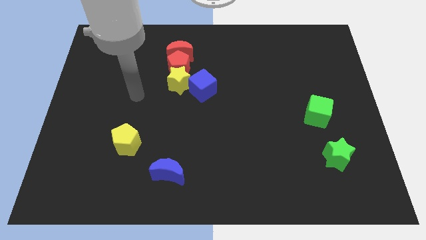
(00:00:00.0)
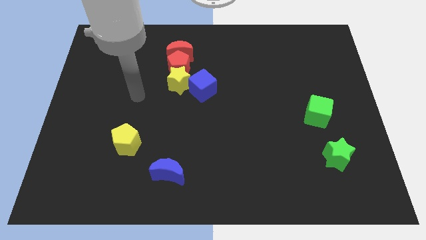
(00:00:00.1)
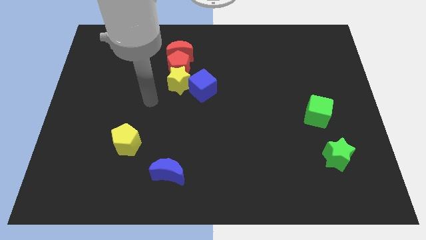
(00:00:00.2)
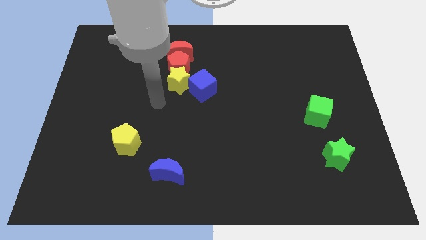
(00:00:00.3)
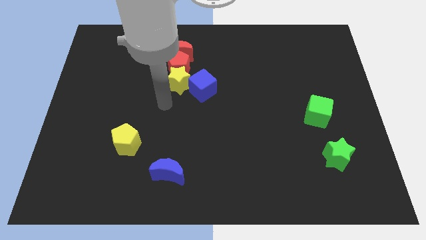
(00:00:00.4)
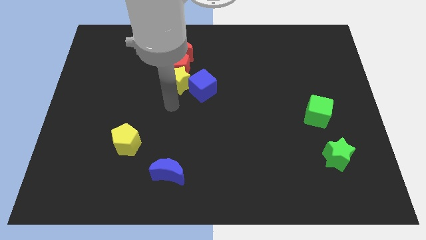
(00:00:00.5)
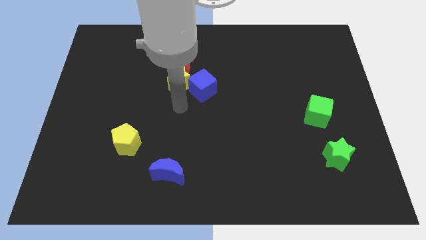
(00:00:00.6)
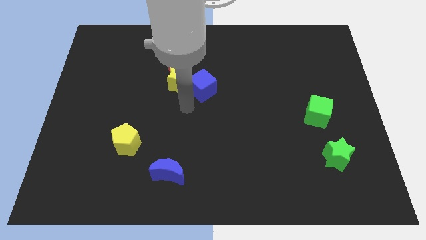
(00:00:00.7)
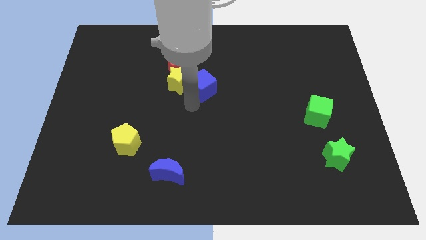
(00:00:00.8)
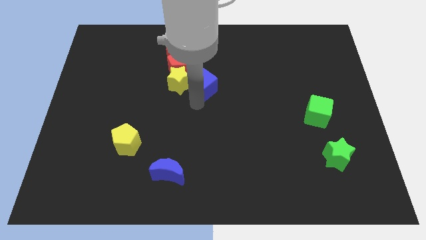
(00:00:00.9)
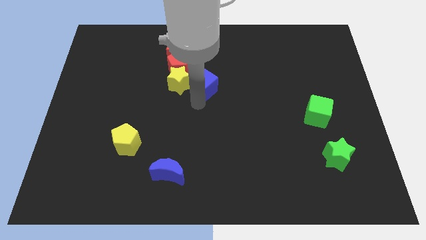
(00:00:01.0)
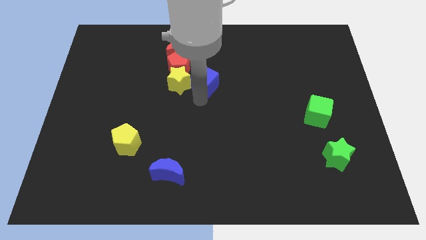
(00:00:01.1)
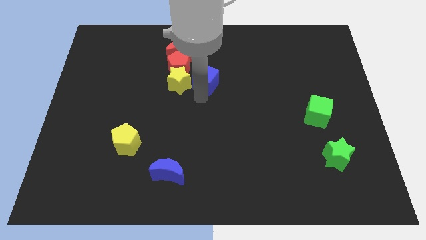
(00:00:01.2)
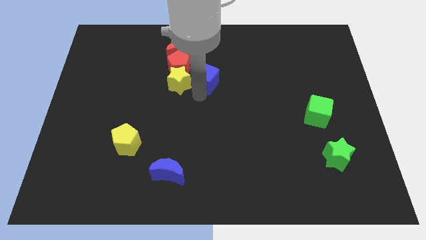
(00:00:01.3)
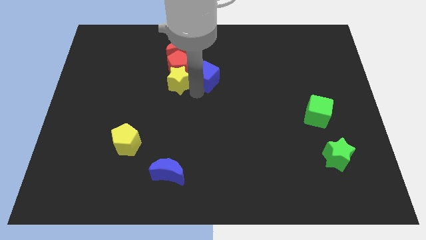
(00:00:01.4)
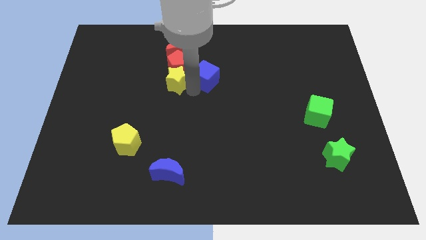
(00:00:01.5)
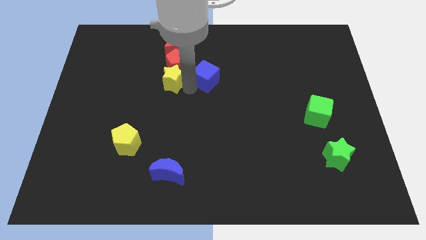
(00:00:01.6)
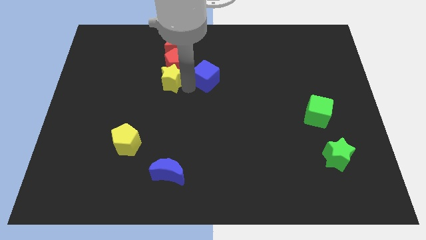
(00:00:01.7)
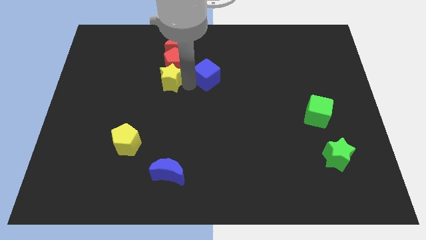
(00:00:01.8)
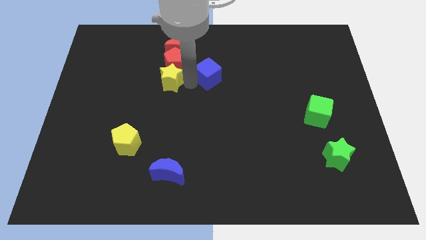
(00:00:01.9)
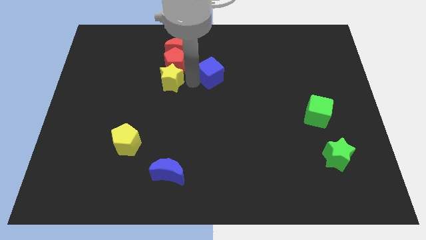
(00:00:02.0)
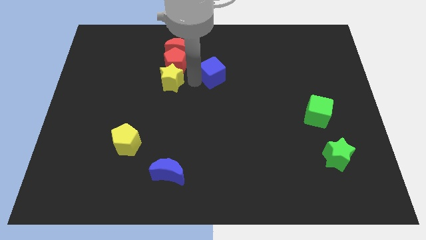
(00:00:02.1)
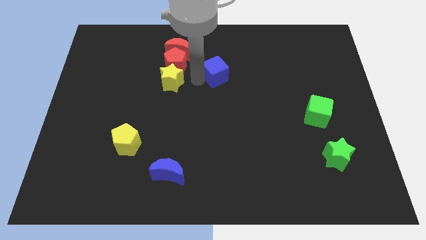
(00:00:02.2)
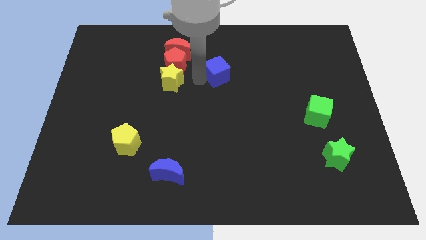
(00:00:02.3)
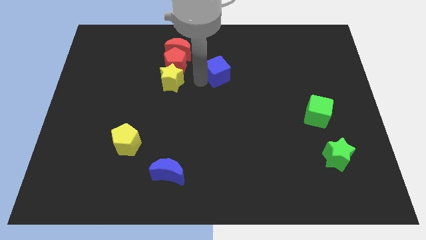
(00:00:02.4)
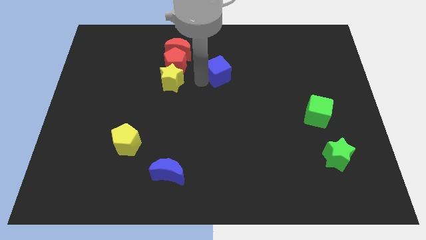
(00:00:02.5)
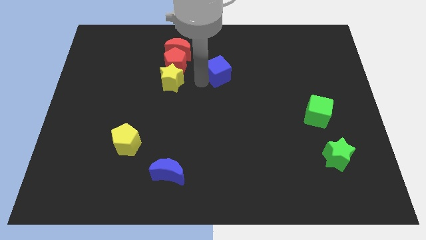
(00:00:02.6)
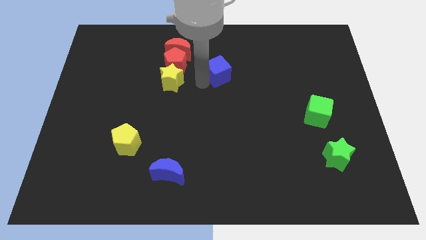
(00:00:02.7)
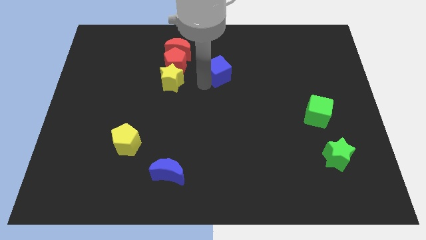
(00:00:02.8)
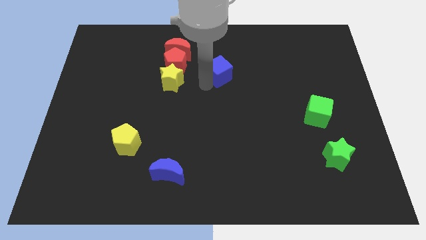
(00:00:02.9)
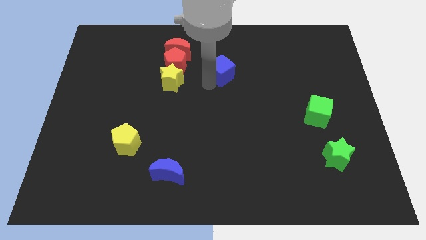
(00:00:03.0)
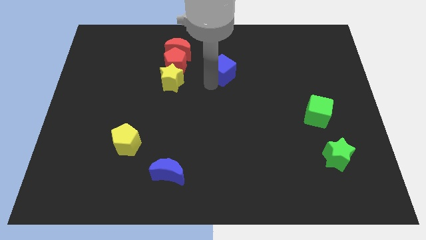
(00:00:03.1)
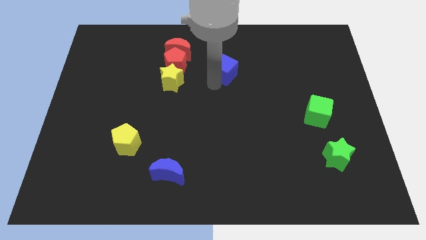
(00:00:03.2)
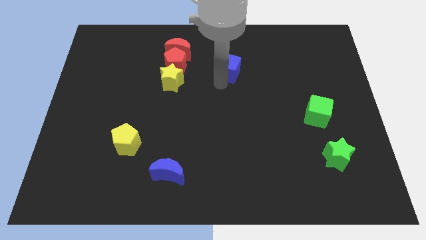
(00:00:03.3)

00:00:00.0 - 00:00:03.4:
move the blue cube away from the yellow star

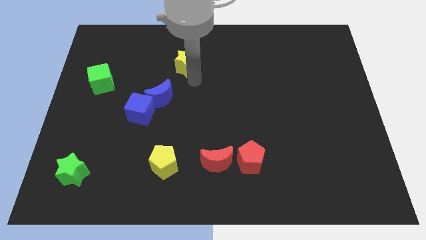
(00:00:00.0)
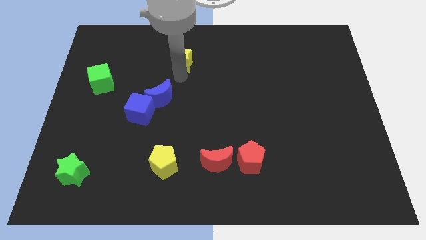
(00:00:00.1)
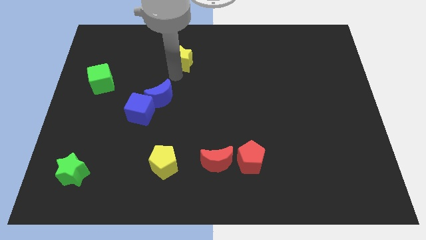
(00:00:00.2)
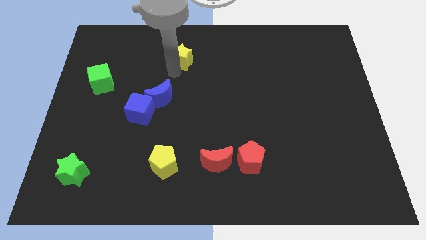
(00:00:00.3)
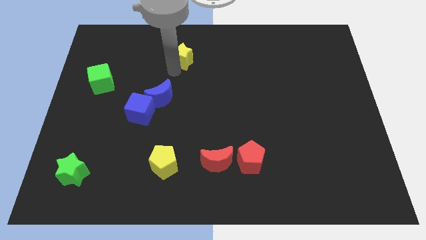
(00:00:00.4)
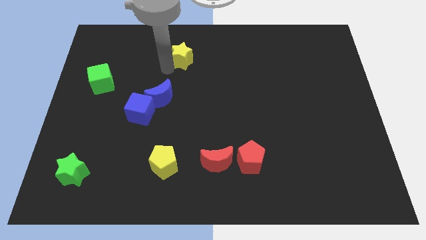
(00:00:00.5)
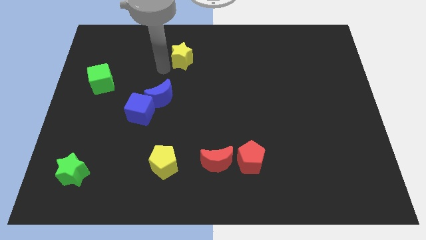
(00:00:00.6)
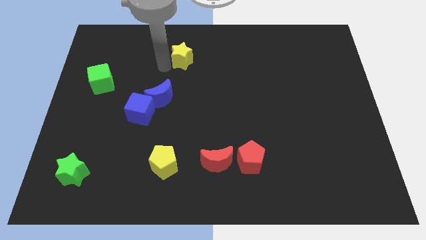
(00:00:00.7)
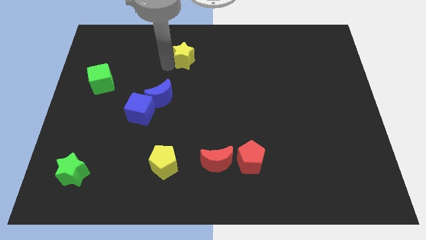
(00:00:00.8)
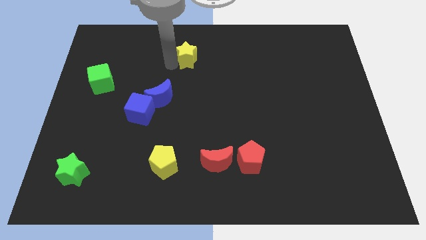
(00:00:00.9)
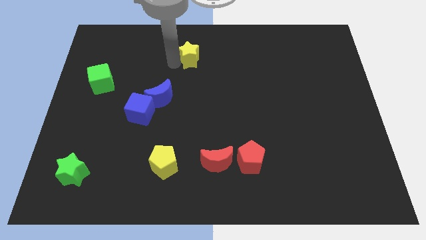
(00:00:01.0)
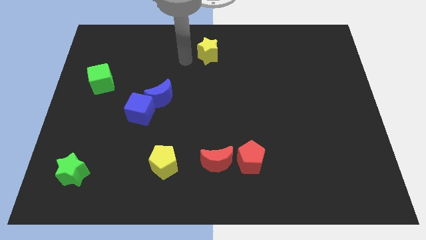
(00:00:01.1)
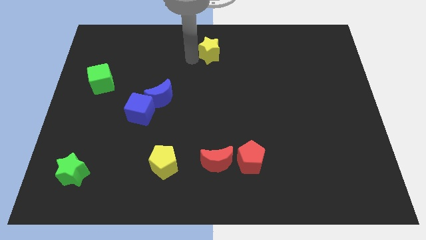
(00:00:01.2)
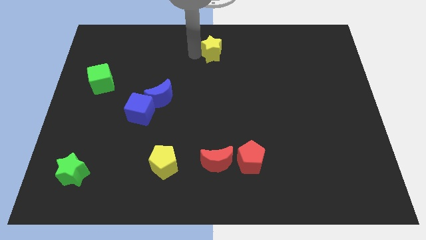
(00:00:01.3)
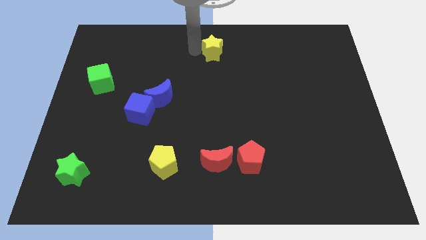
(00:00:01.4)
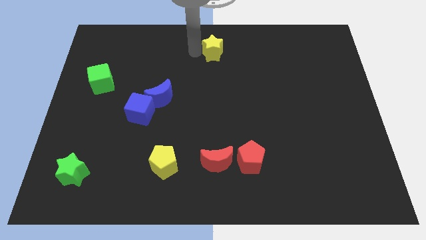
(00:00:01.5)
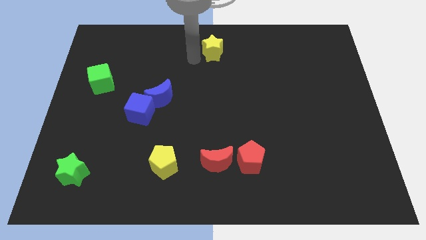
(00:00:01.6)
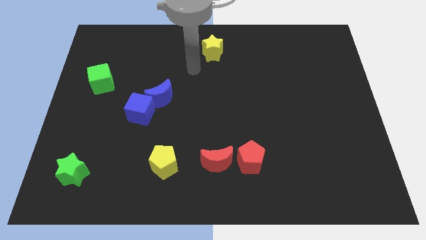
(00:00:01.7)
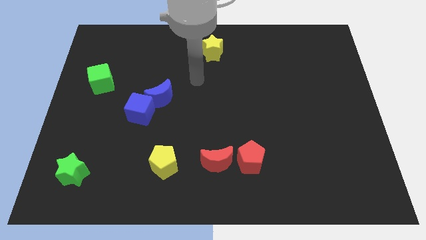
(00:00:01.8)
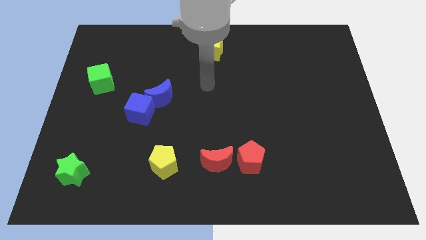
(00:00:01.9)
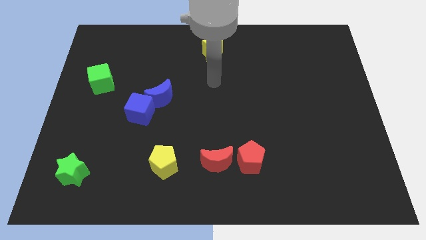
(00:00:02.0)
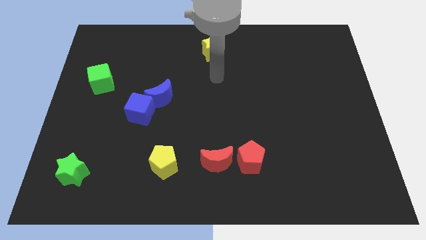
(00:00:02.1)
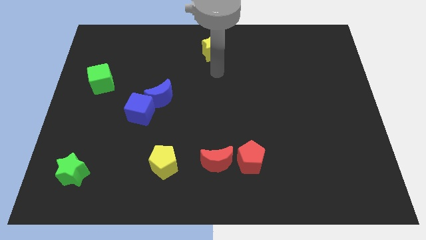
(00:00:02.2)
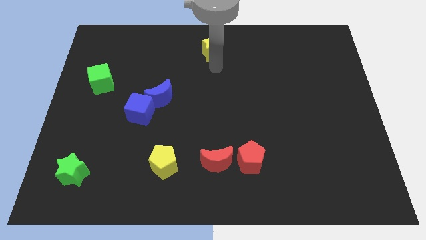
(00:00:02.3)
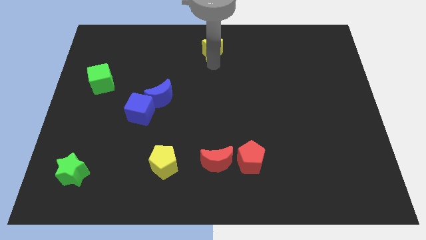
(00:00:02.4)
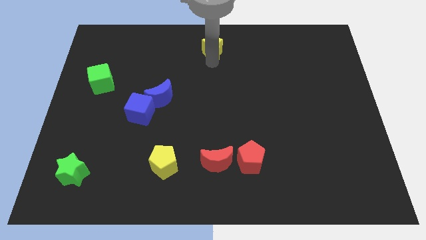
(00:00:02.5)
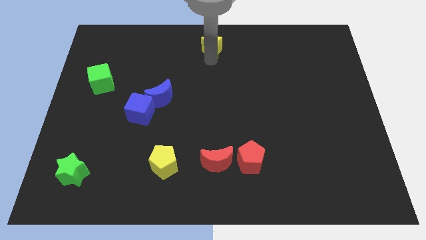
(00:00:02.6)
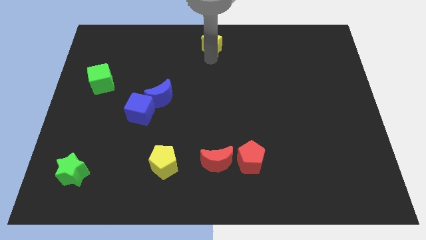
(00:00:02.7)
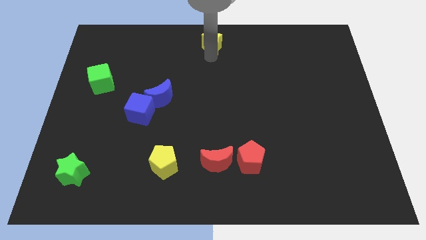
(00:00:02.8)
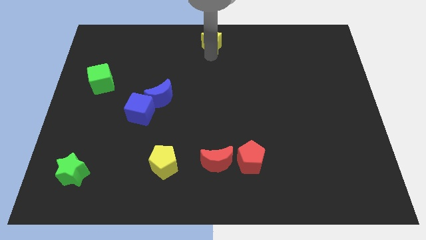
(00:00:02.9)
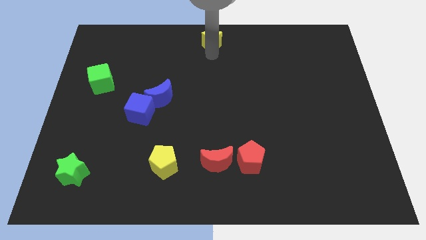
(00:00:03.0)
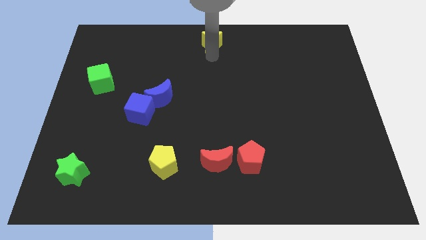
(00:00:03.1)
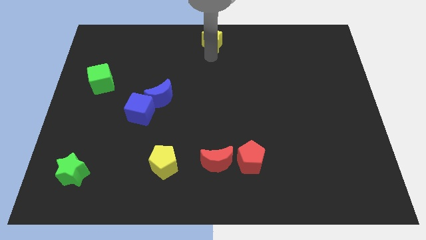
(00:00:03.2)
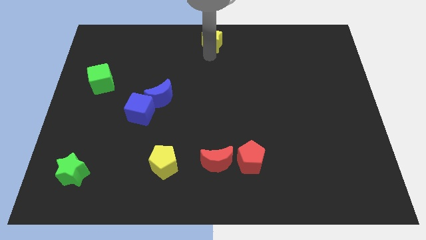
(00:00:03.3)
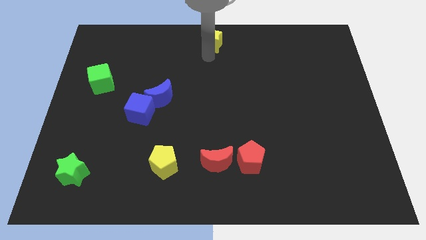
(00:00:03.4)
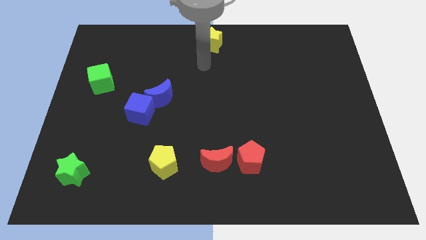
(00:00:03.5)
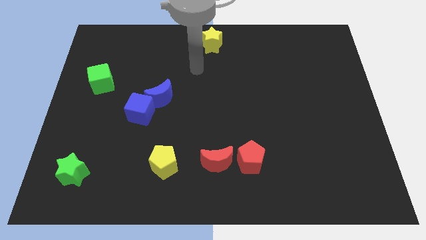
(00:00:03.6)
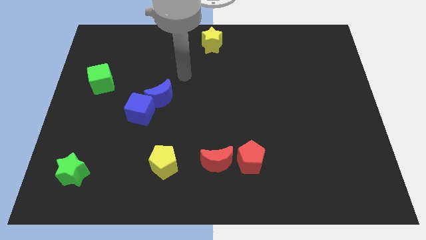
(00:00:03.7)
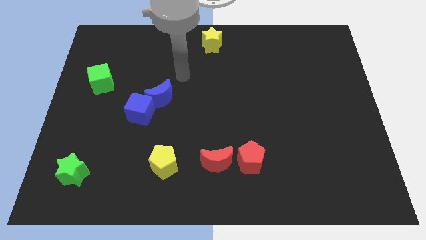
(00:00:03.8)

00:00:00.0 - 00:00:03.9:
place the yellow star at the top of the red moon

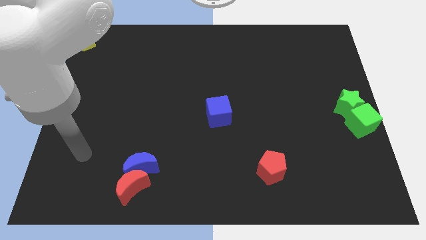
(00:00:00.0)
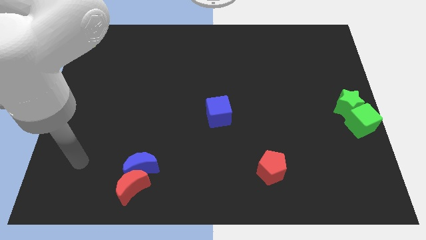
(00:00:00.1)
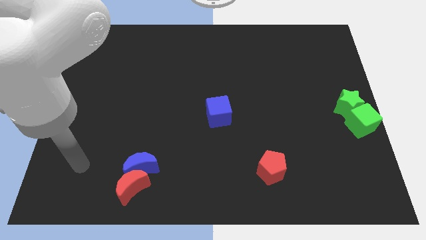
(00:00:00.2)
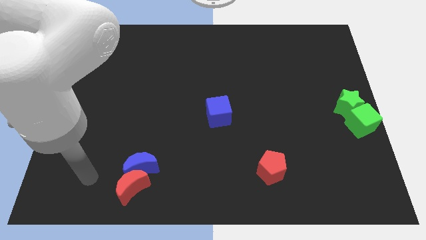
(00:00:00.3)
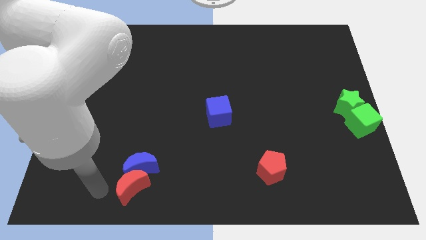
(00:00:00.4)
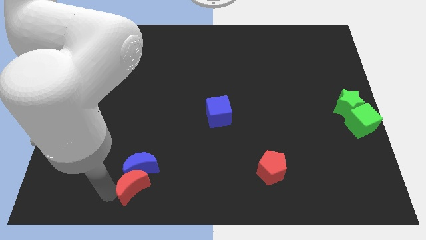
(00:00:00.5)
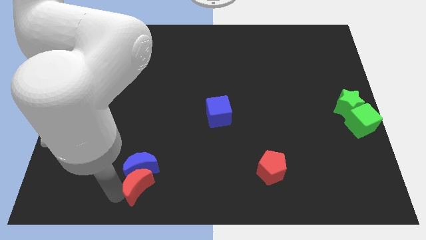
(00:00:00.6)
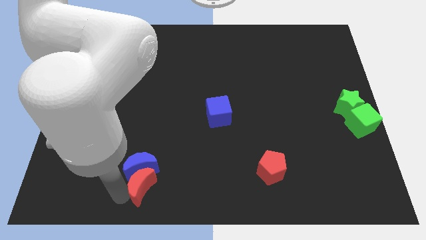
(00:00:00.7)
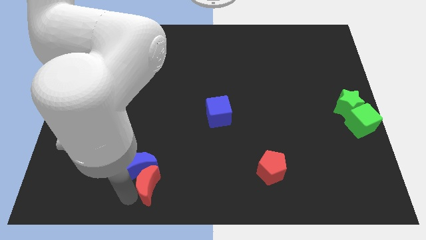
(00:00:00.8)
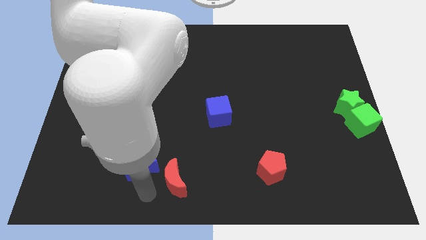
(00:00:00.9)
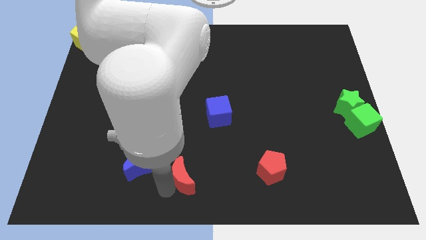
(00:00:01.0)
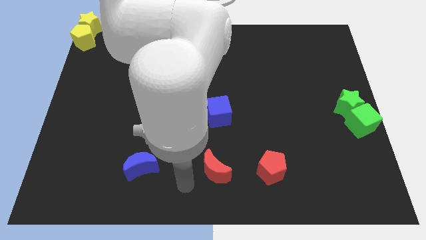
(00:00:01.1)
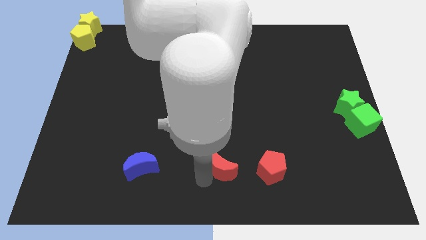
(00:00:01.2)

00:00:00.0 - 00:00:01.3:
push red crescent above blue cube

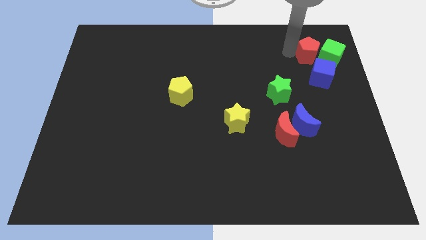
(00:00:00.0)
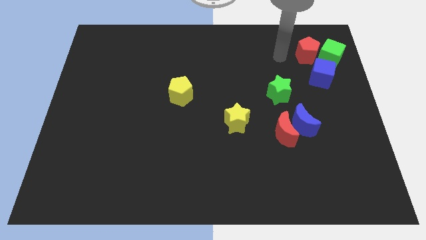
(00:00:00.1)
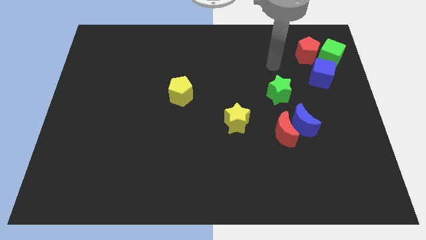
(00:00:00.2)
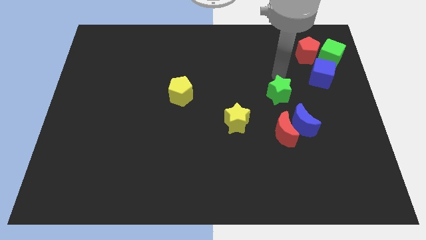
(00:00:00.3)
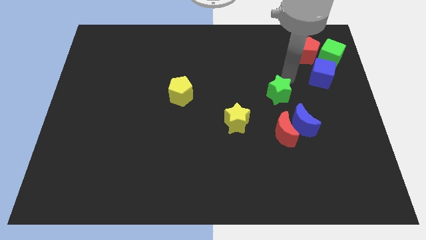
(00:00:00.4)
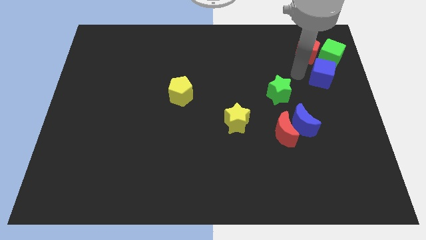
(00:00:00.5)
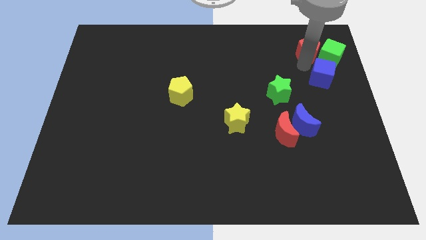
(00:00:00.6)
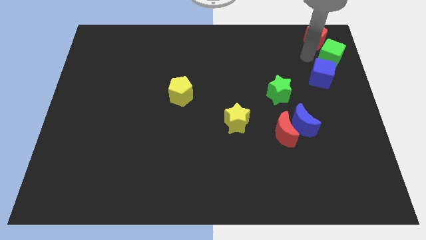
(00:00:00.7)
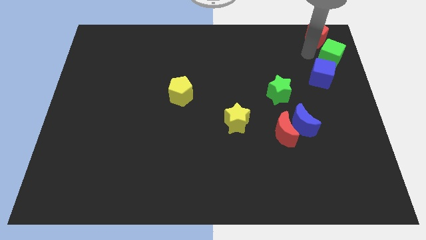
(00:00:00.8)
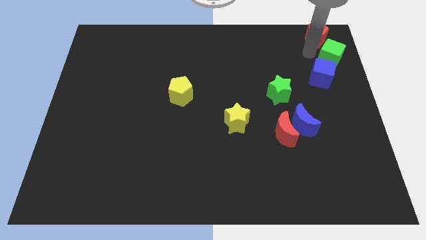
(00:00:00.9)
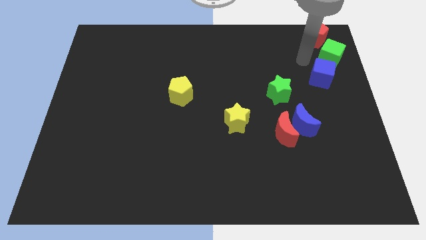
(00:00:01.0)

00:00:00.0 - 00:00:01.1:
move red pentagon to the top right
